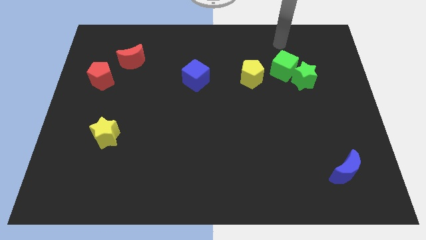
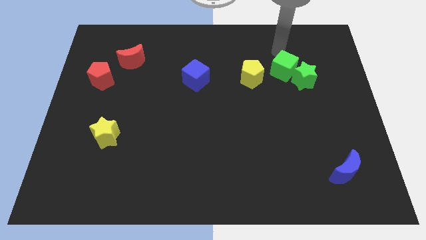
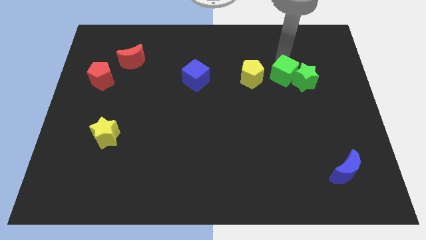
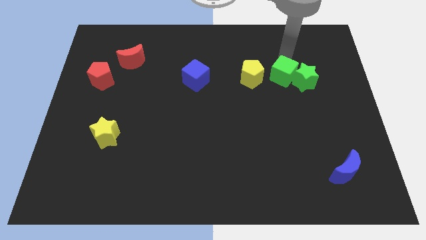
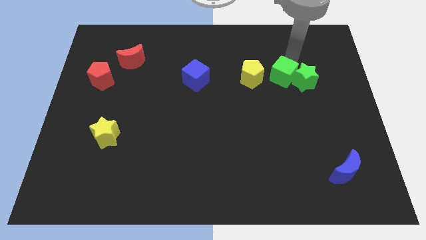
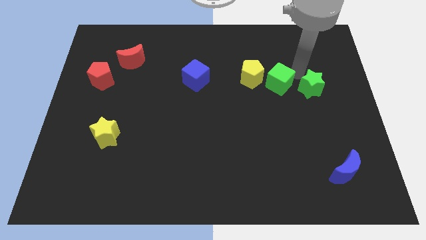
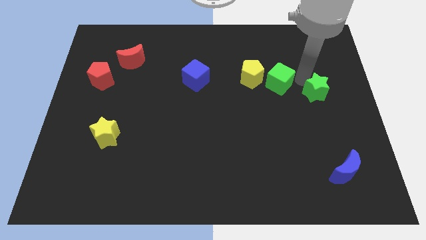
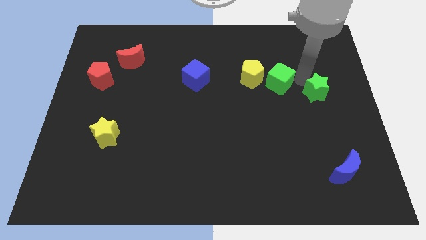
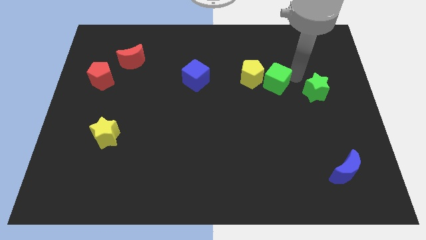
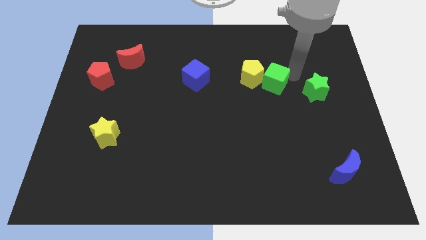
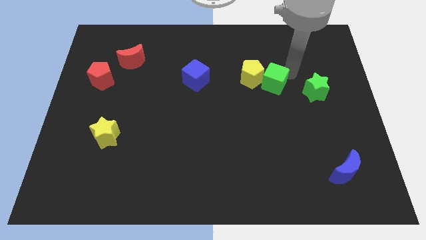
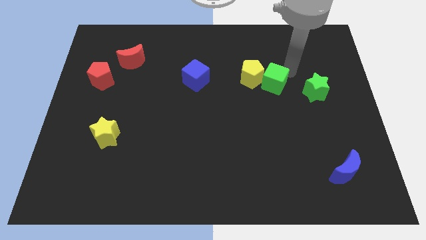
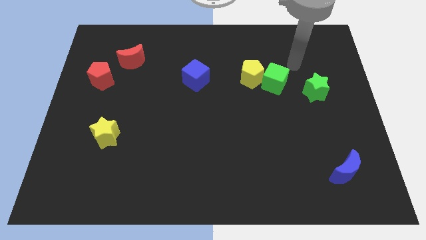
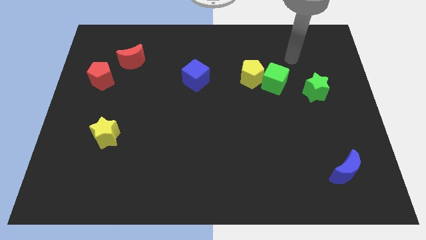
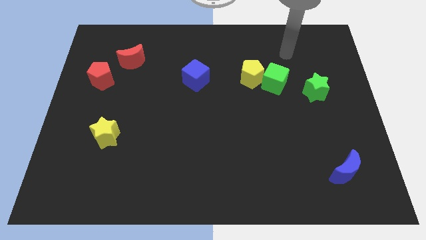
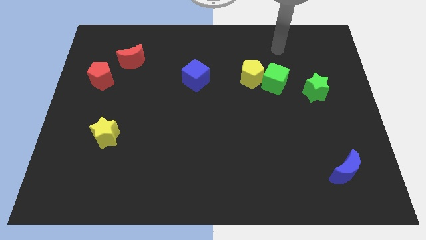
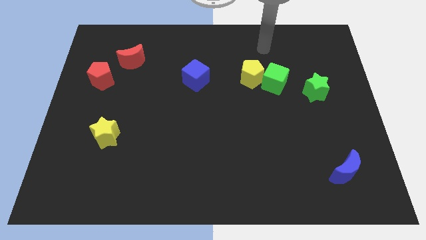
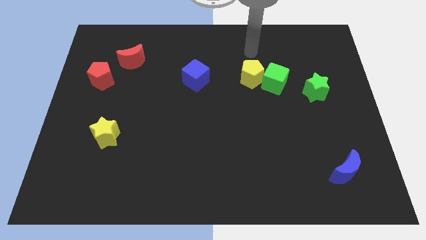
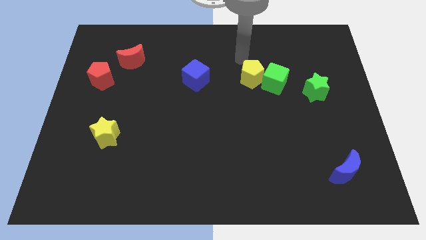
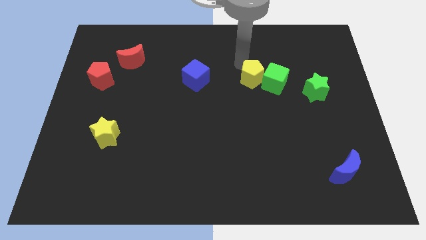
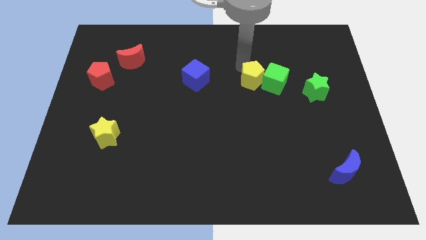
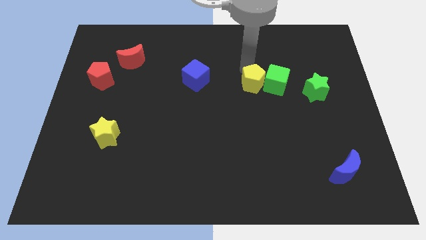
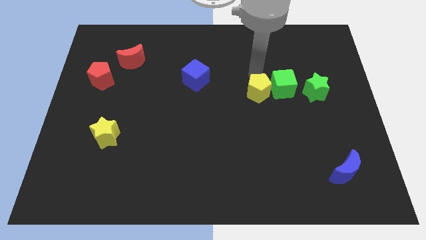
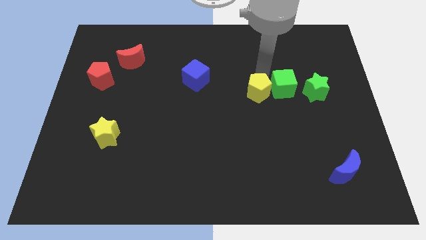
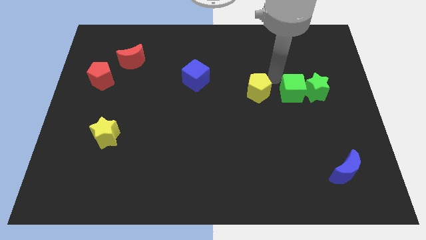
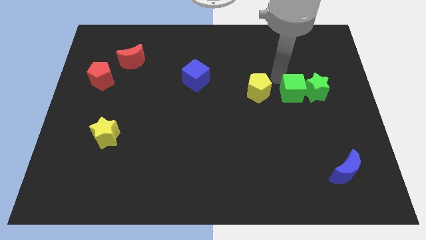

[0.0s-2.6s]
arrange the green blocks and yellow pentagon in a line

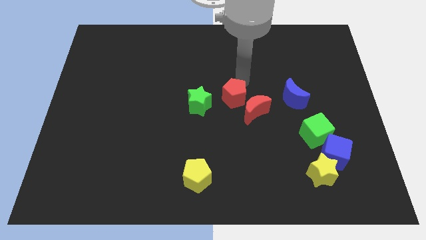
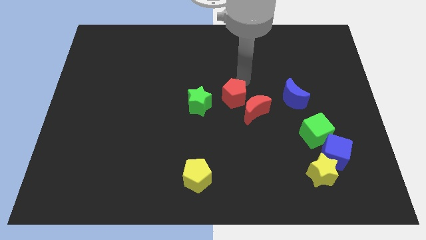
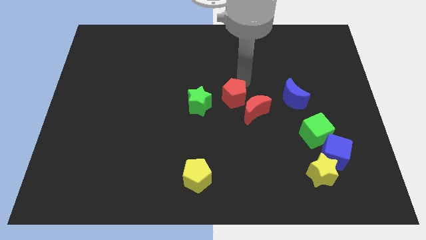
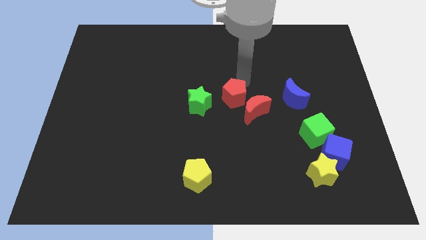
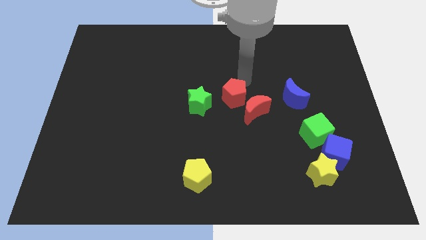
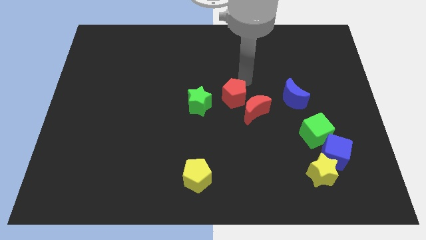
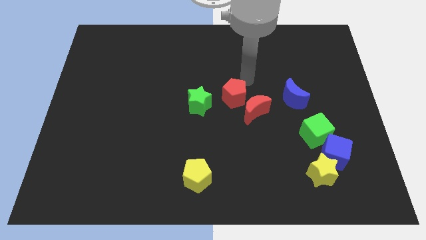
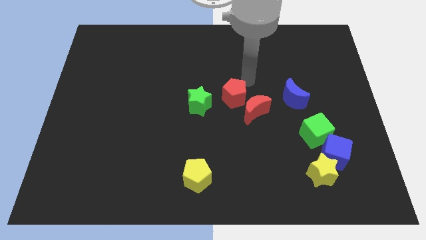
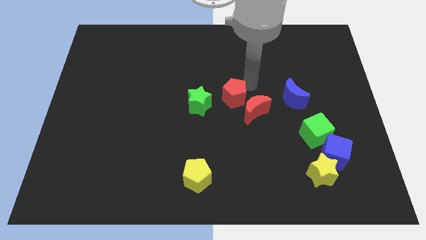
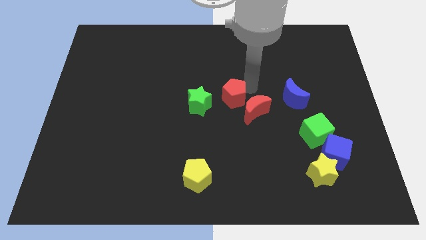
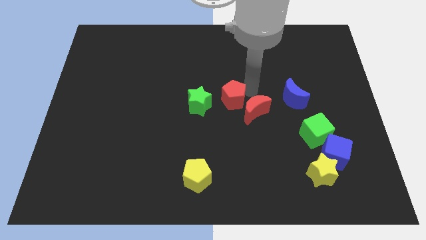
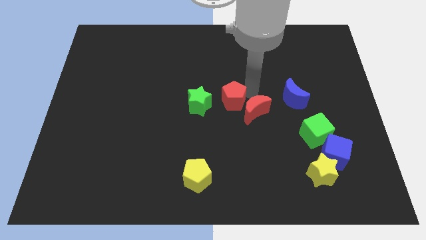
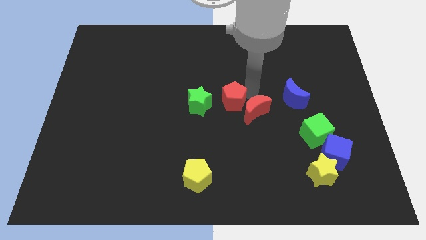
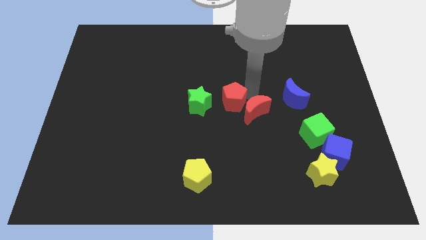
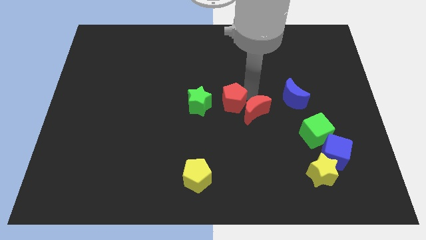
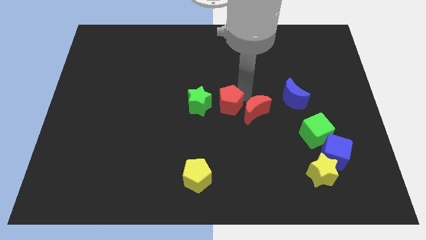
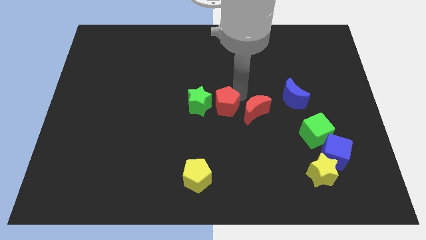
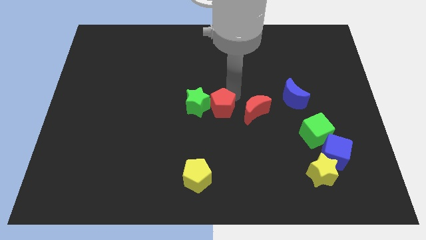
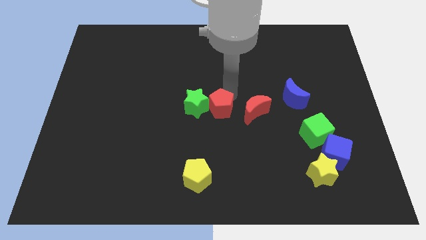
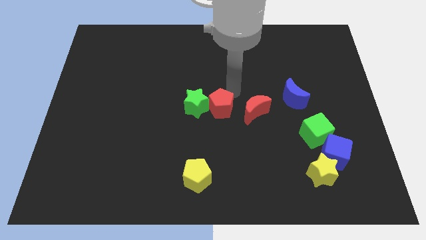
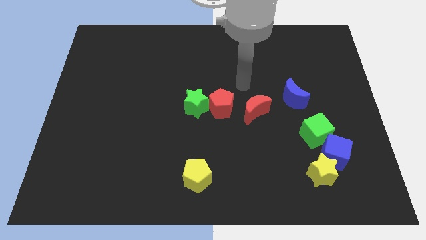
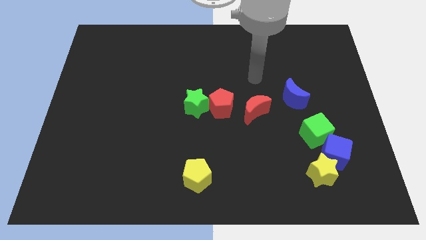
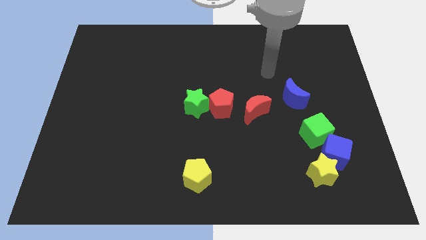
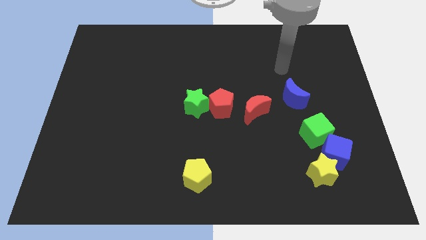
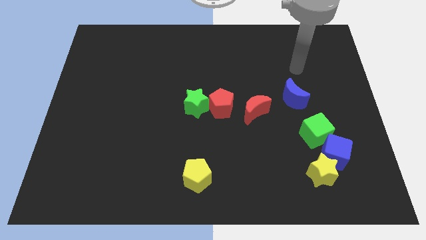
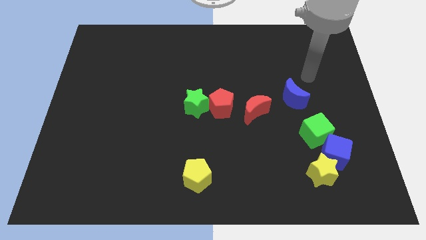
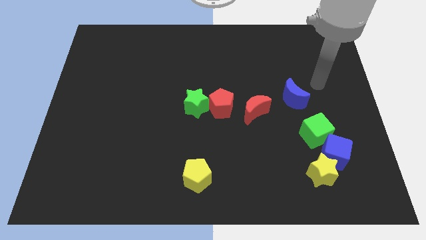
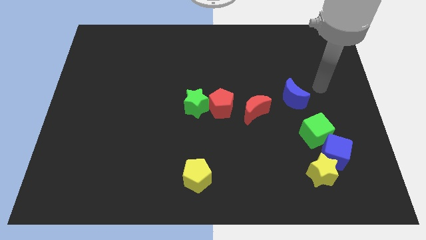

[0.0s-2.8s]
push the red pentagon into the right side of the green star

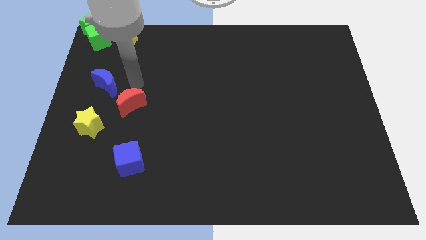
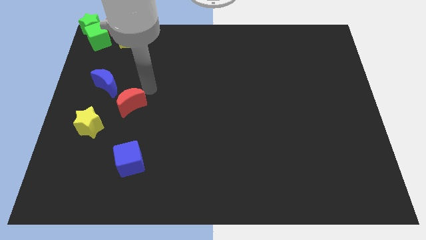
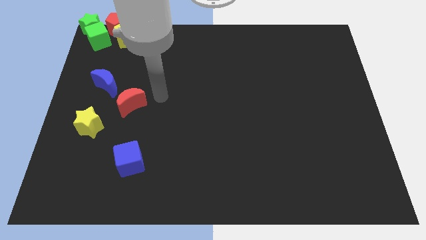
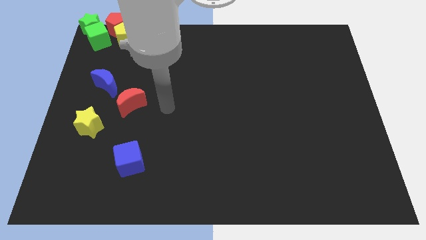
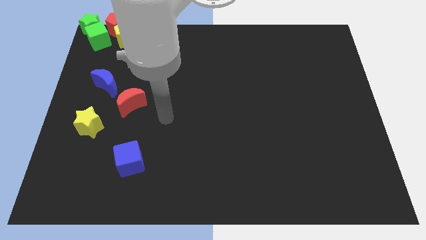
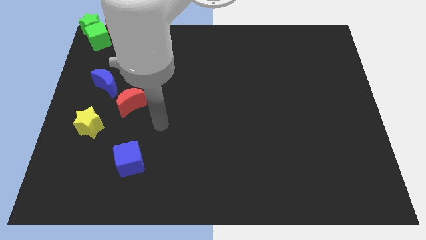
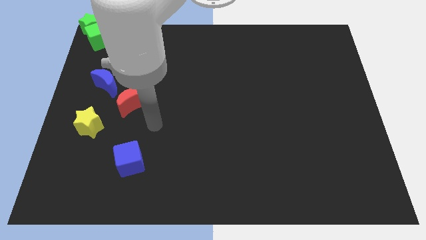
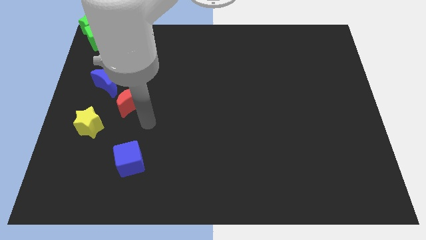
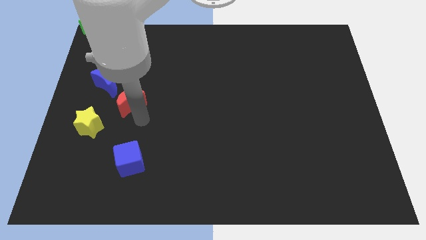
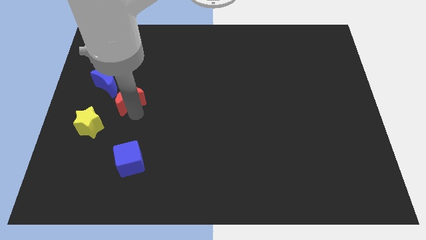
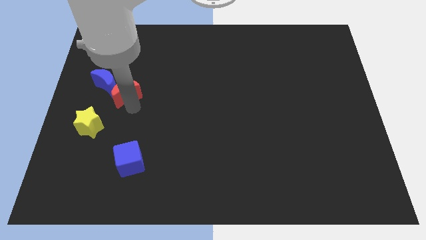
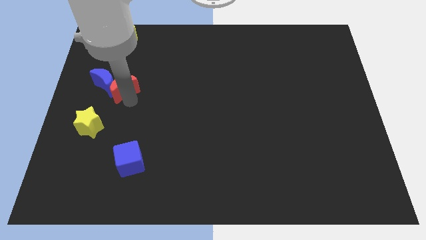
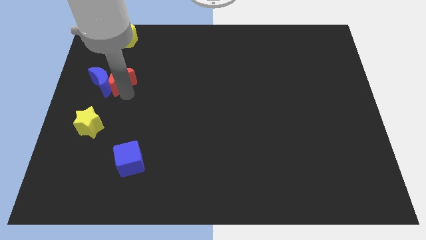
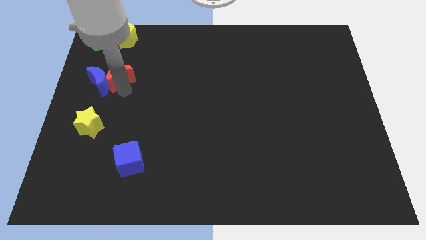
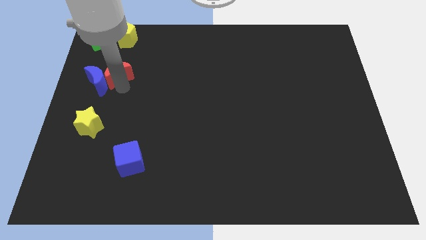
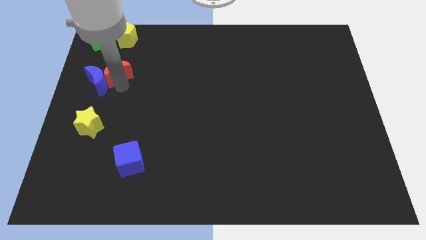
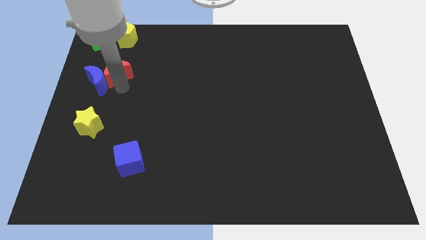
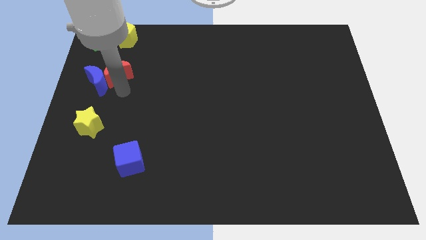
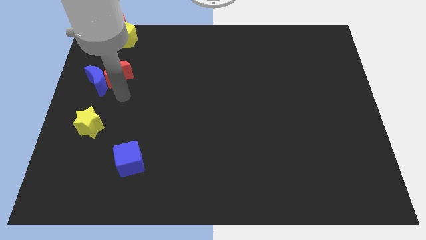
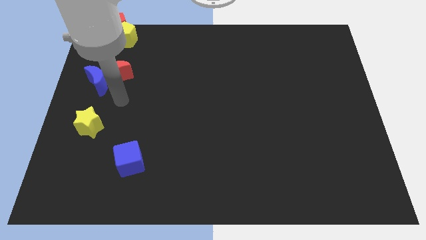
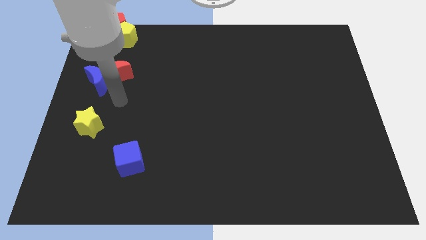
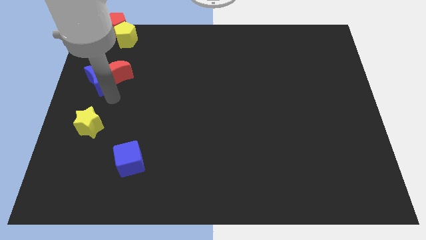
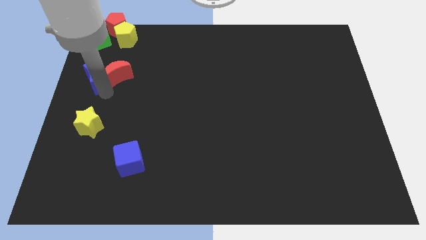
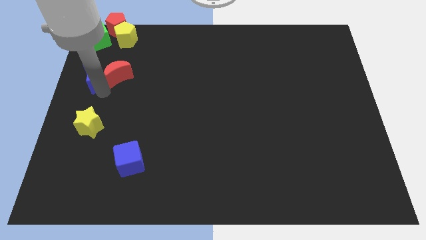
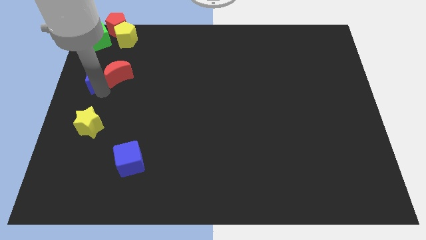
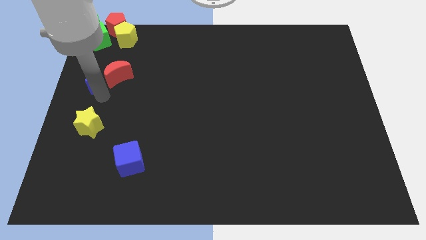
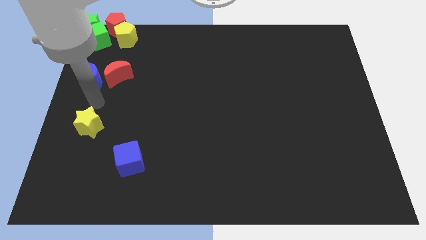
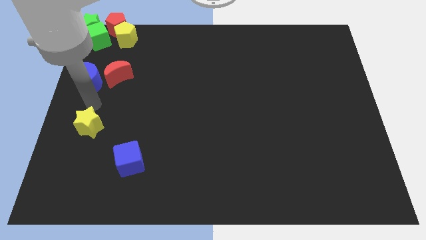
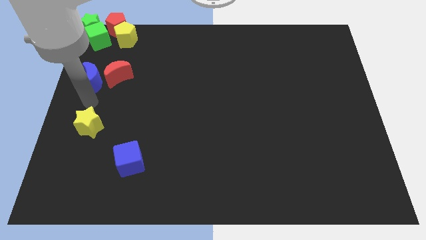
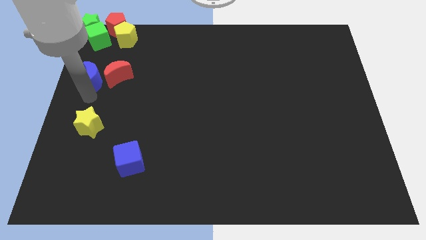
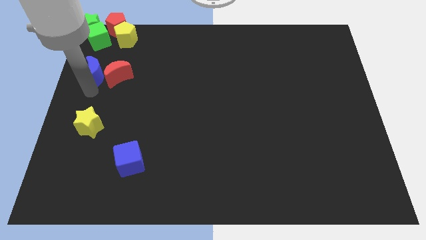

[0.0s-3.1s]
put the red moon parallel right to the blue moon

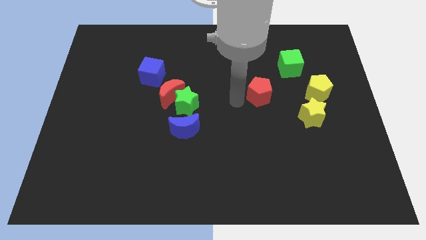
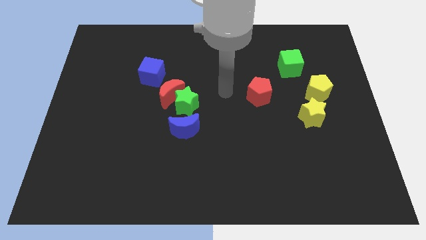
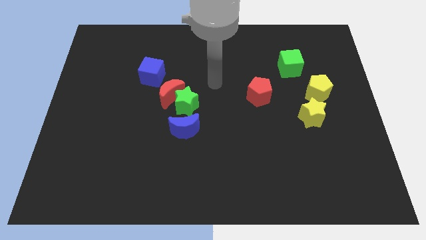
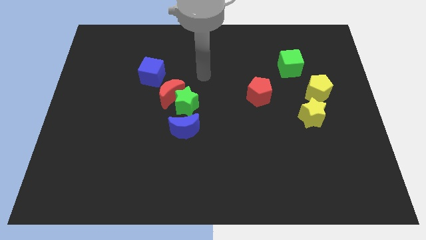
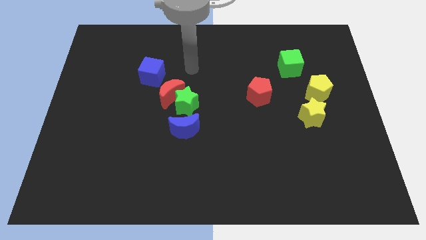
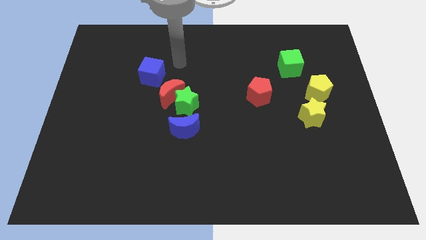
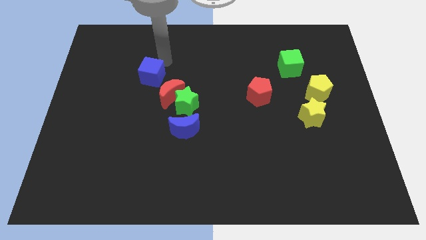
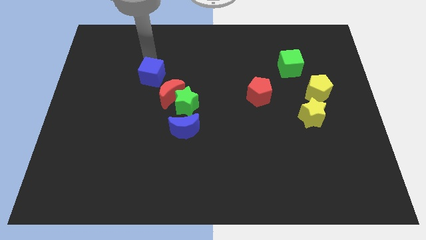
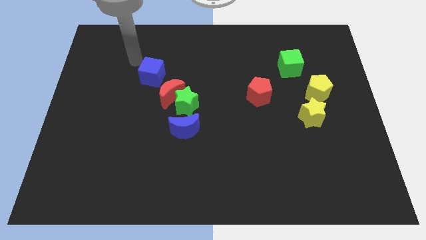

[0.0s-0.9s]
place your hand above the blue cube
